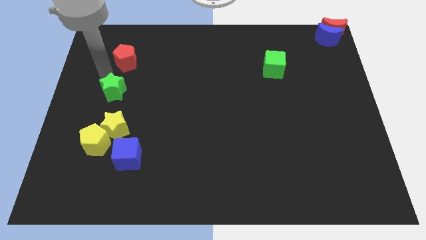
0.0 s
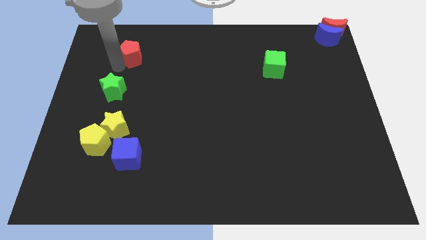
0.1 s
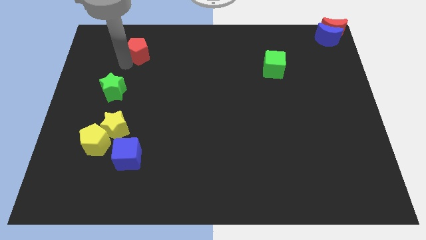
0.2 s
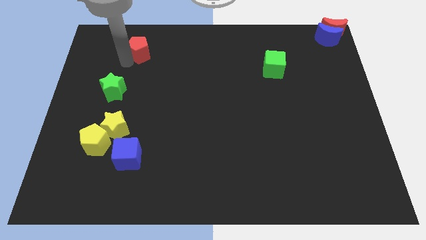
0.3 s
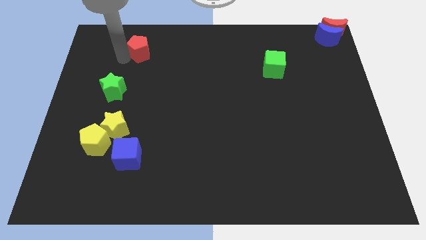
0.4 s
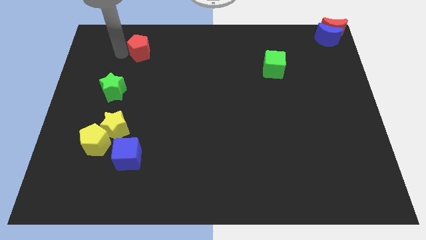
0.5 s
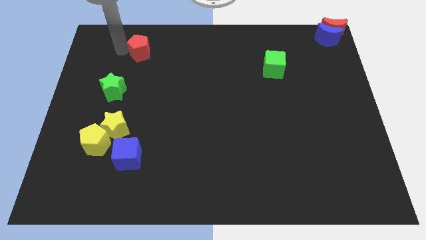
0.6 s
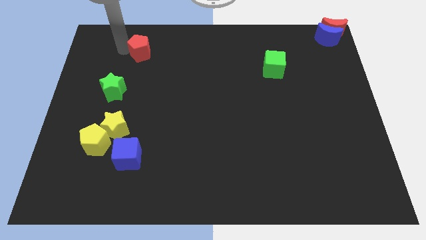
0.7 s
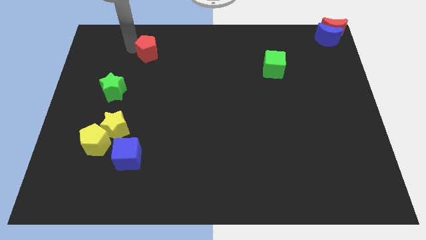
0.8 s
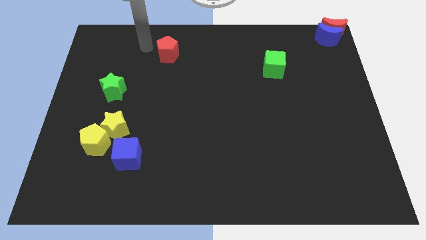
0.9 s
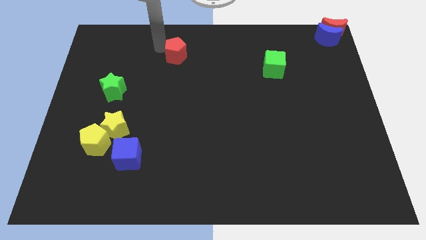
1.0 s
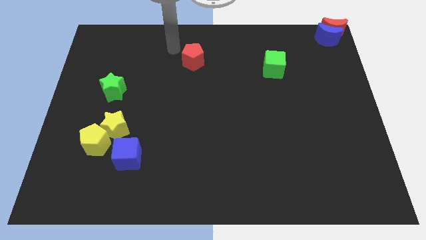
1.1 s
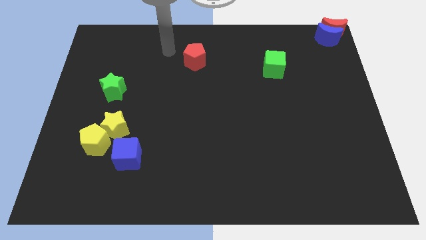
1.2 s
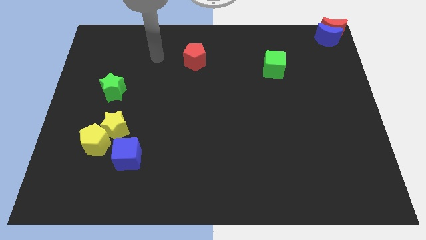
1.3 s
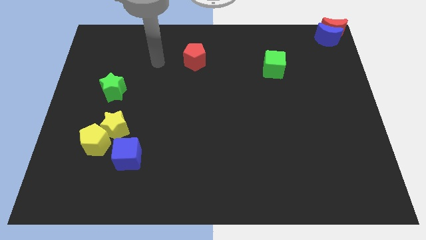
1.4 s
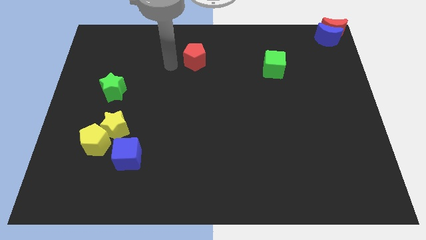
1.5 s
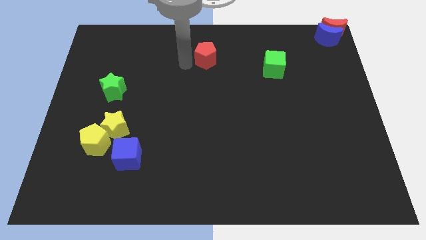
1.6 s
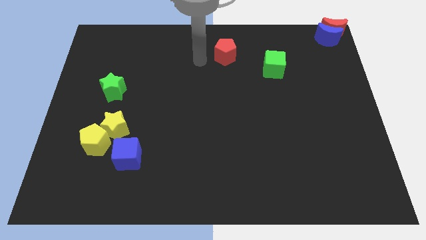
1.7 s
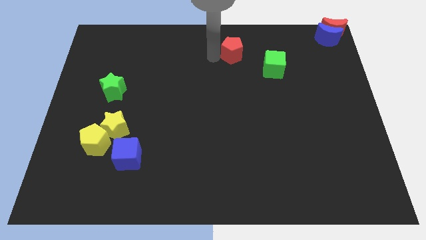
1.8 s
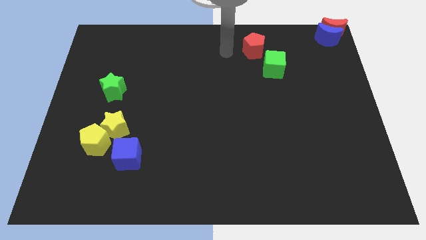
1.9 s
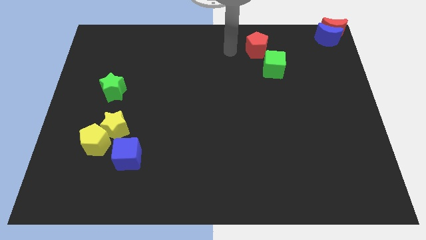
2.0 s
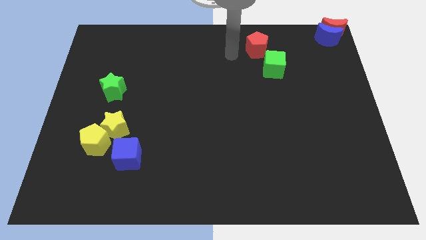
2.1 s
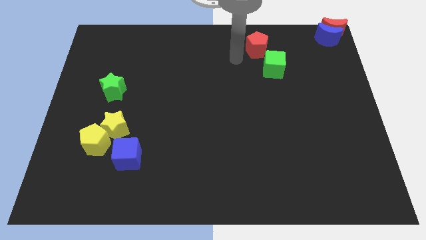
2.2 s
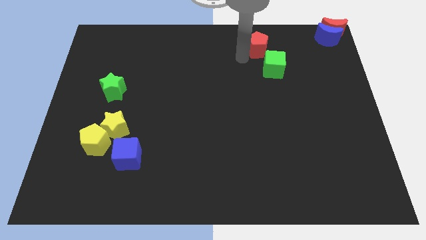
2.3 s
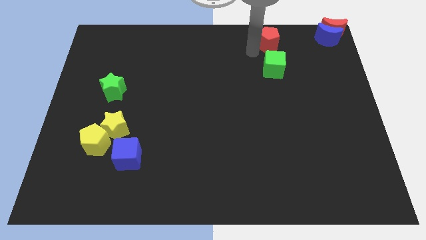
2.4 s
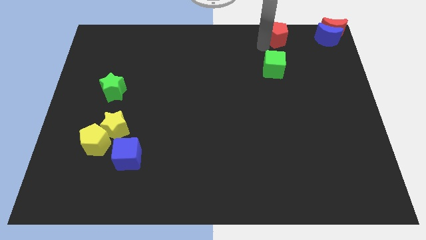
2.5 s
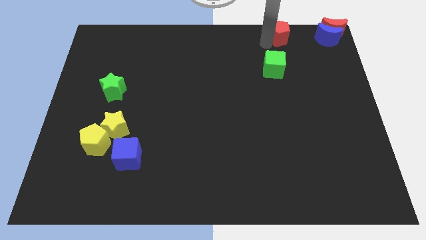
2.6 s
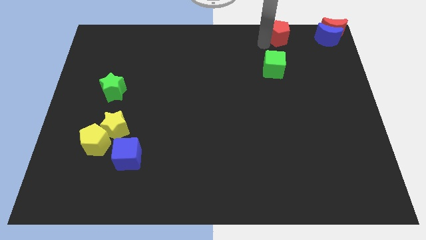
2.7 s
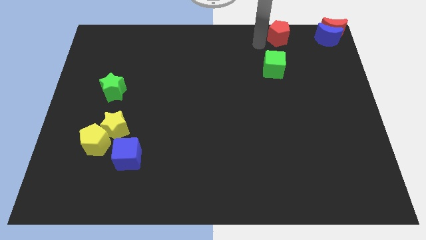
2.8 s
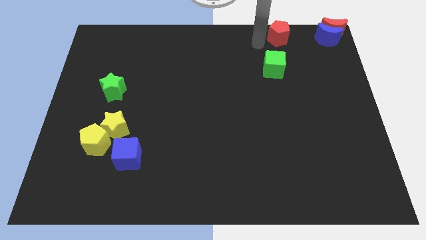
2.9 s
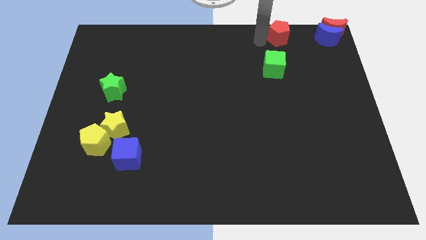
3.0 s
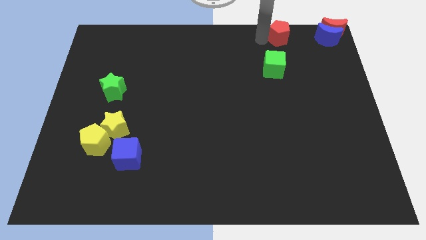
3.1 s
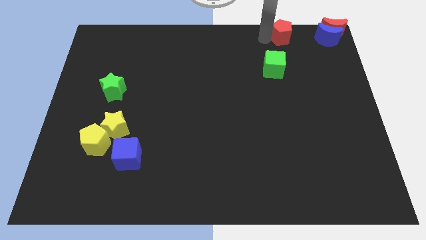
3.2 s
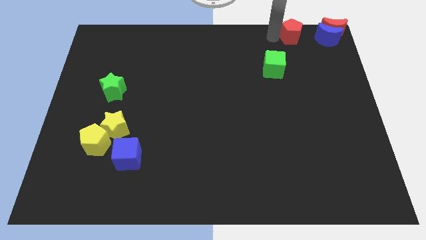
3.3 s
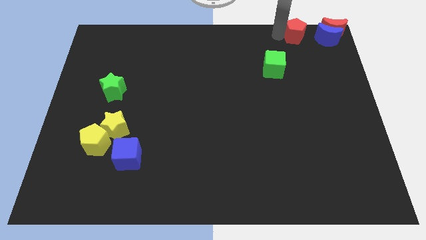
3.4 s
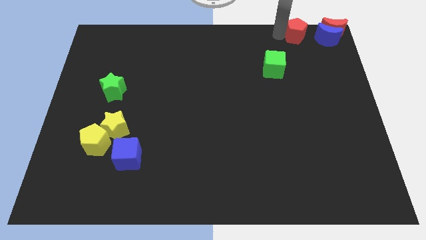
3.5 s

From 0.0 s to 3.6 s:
push the red pentag on near to the redblue crescent on top right side corner of the board

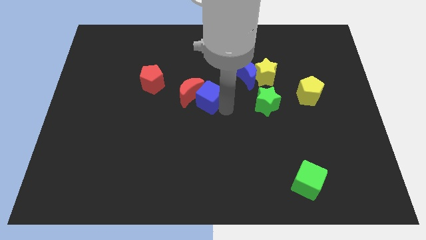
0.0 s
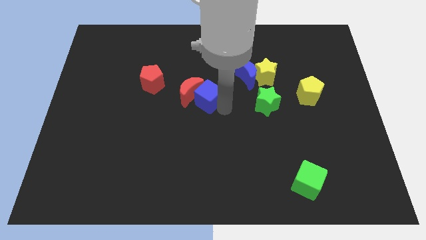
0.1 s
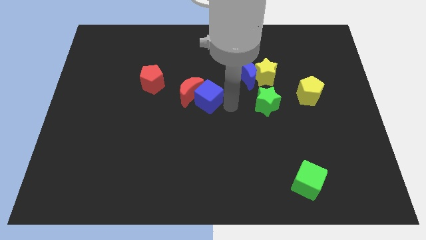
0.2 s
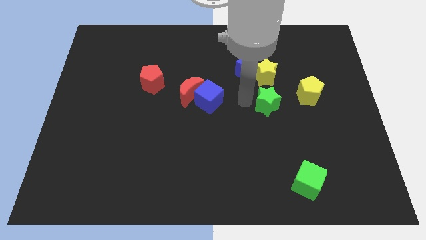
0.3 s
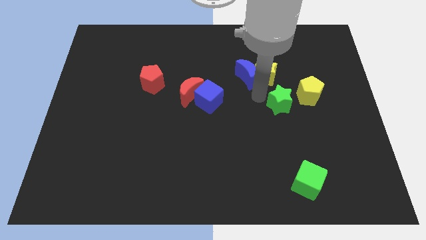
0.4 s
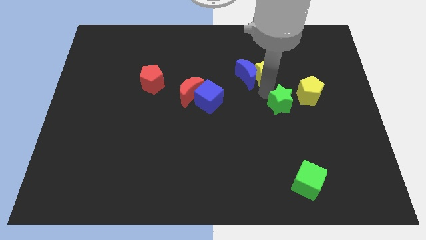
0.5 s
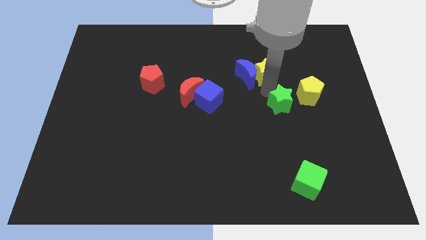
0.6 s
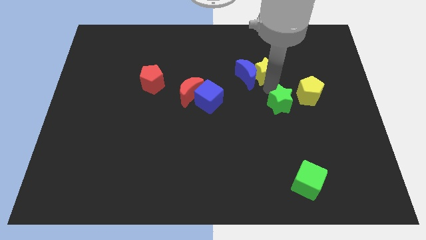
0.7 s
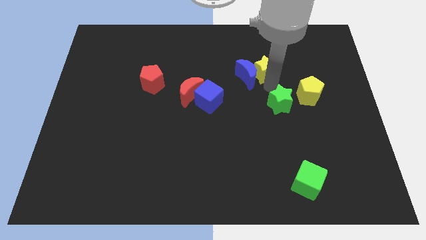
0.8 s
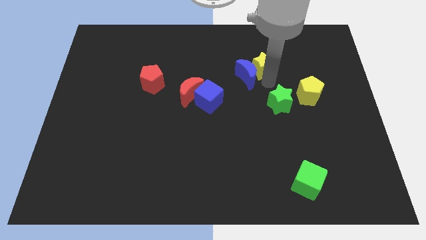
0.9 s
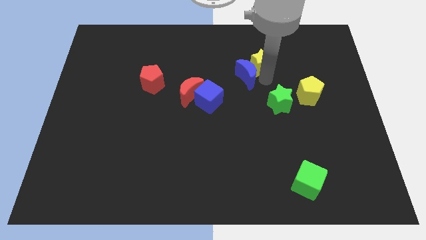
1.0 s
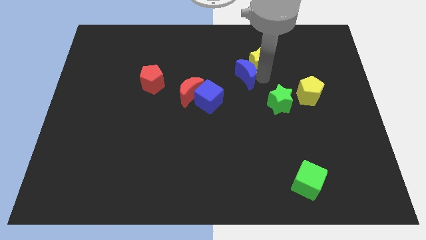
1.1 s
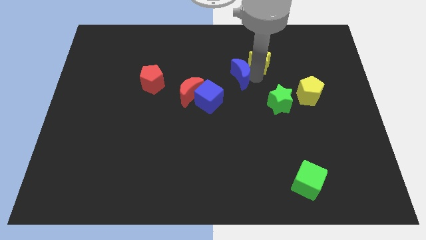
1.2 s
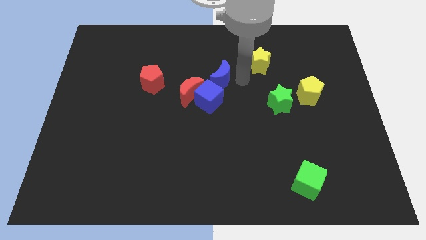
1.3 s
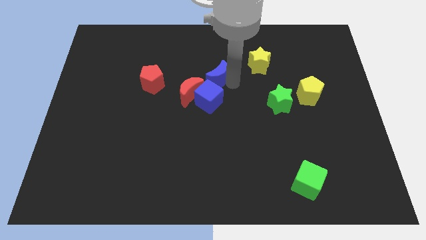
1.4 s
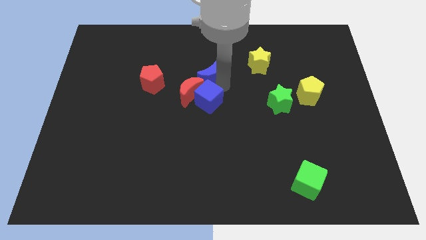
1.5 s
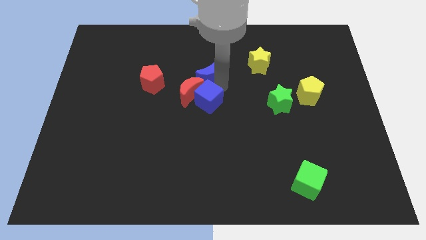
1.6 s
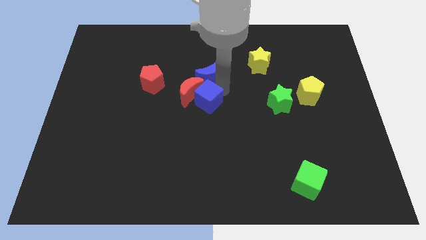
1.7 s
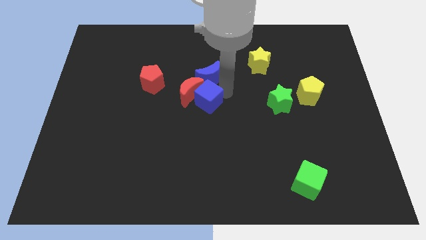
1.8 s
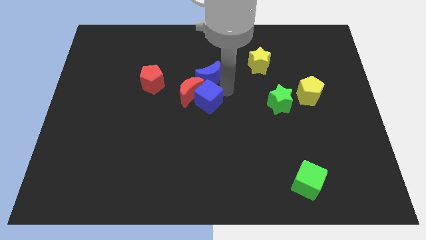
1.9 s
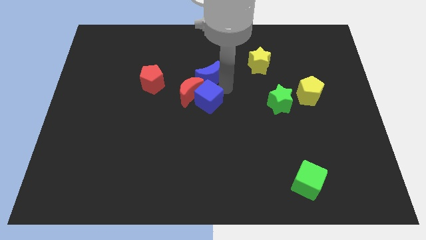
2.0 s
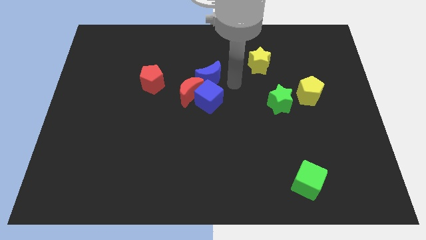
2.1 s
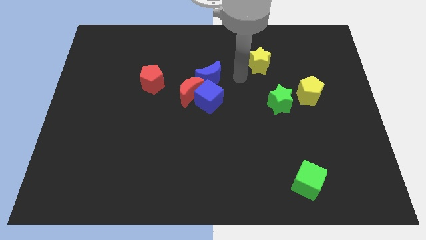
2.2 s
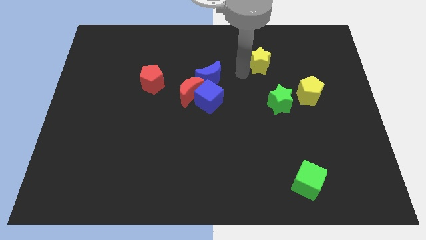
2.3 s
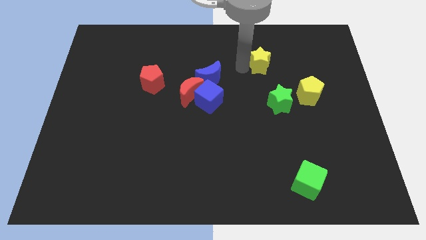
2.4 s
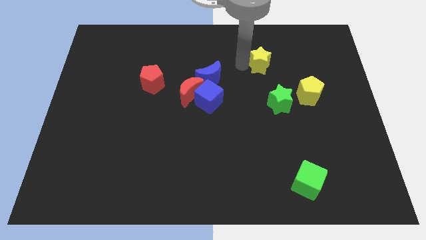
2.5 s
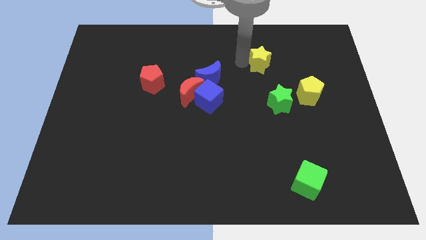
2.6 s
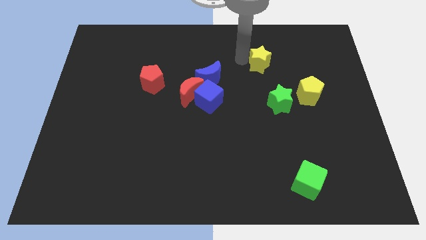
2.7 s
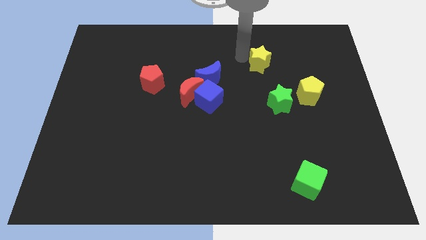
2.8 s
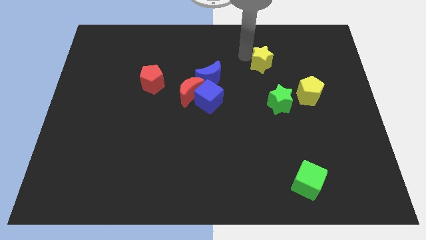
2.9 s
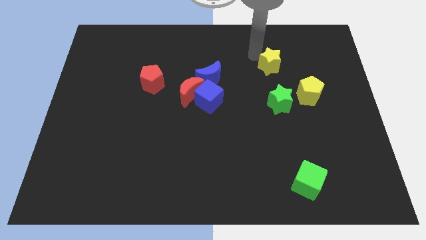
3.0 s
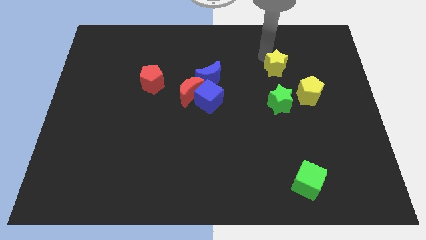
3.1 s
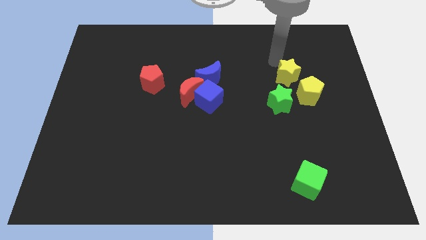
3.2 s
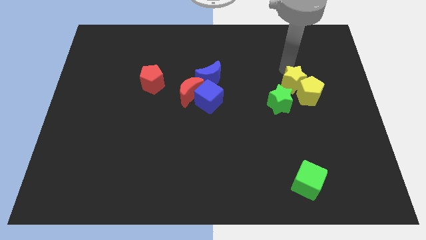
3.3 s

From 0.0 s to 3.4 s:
place the blue moon above the red moon

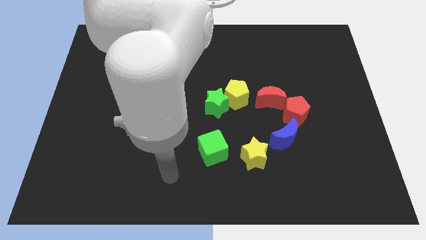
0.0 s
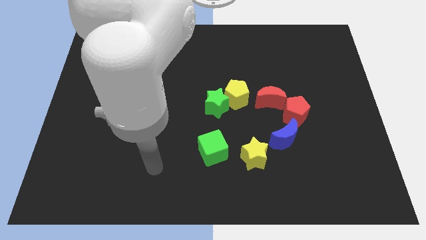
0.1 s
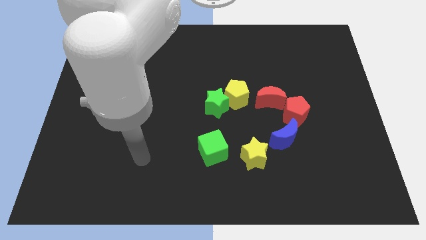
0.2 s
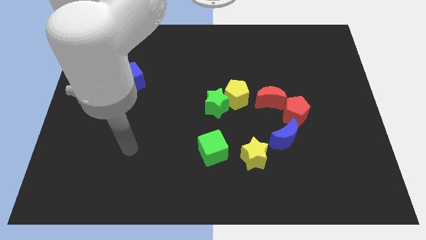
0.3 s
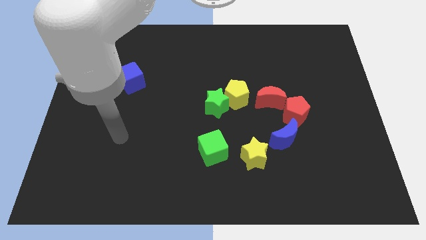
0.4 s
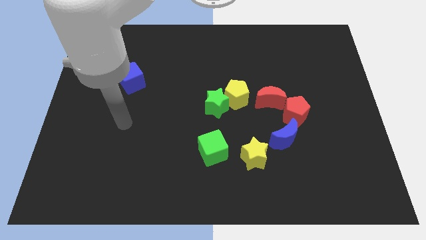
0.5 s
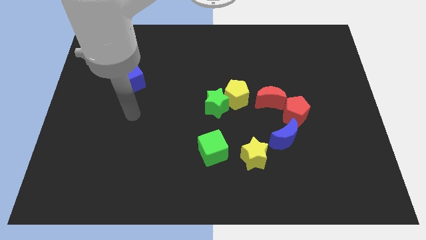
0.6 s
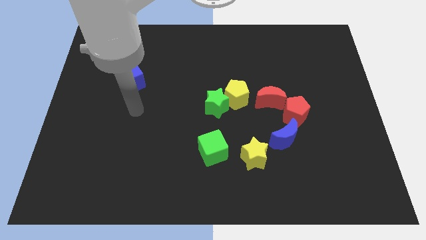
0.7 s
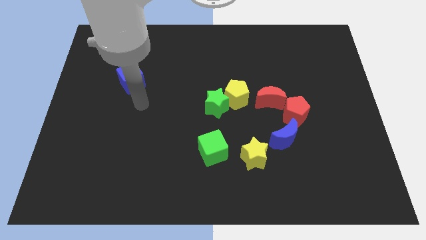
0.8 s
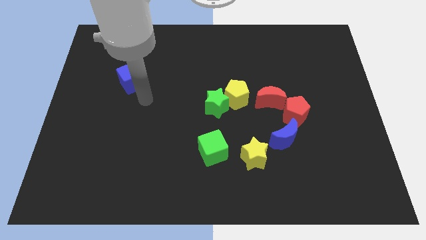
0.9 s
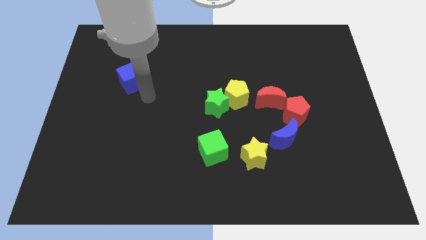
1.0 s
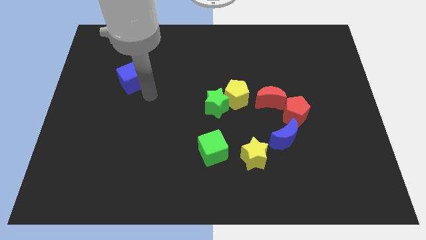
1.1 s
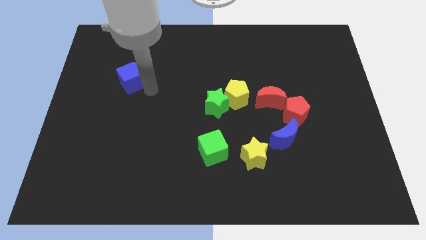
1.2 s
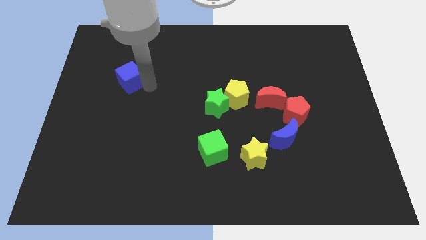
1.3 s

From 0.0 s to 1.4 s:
point your arm at the right of the blue cube

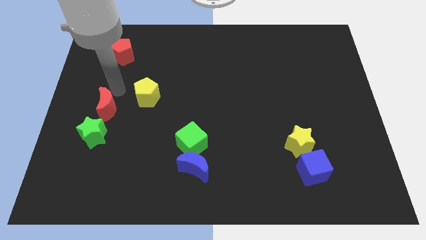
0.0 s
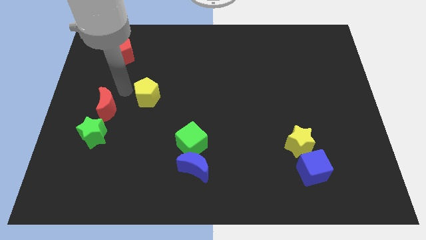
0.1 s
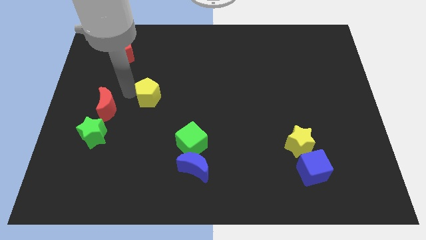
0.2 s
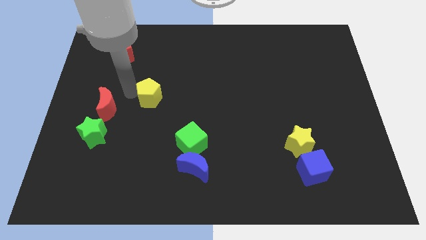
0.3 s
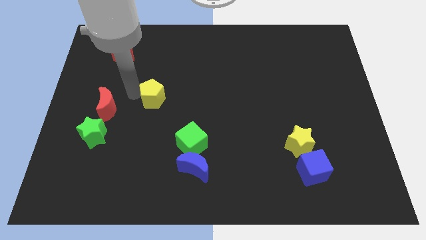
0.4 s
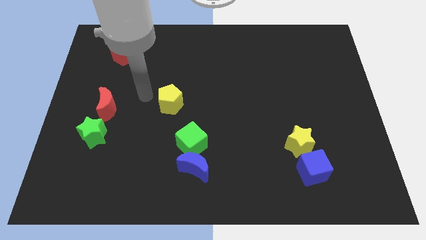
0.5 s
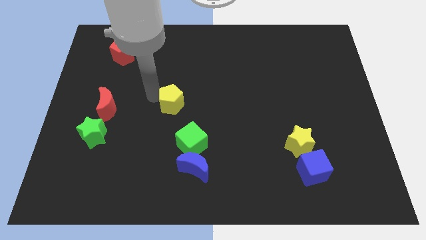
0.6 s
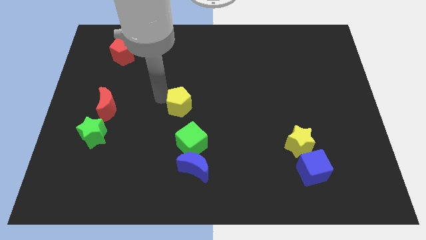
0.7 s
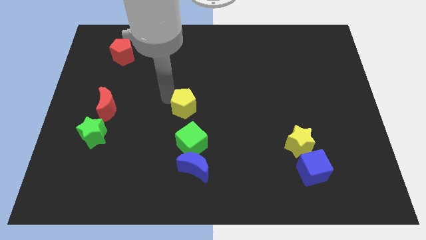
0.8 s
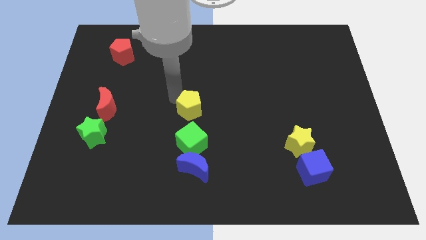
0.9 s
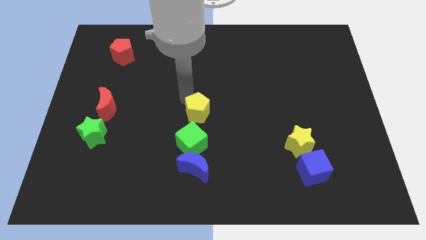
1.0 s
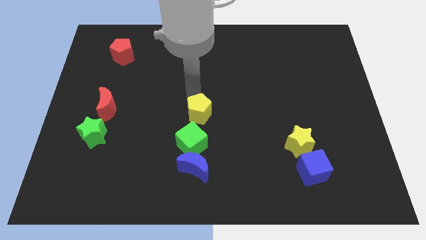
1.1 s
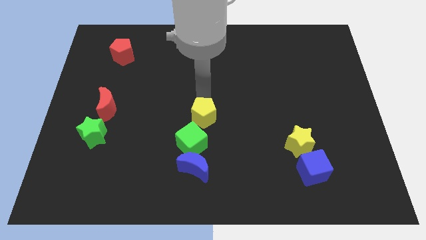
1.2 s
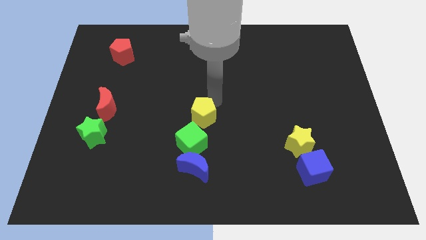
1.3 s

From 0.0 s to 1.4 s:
place the yellow pentagon above the green cube
